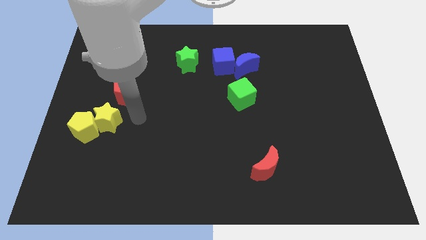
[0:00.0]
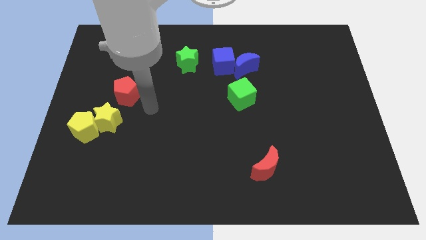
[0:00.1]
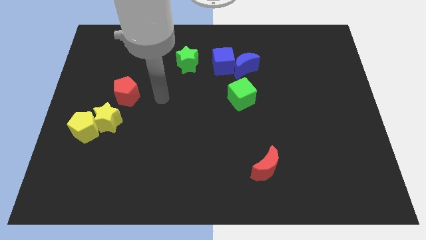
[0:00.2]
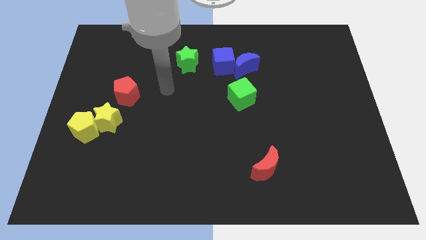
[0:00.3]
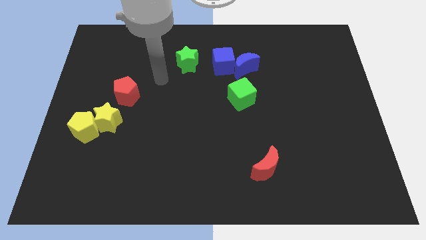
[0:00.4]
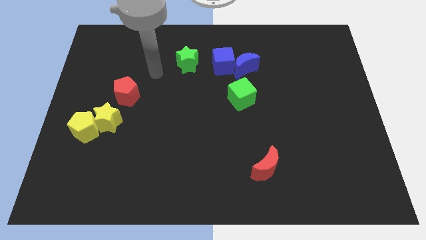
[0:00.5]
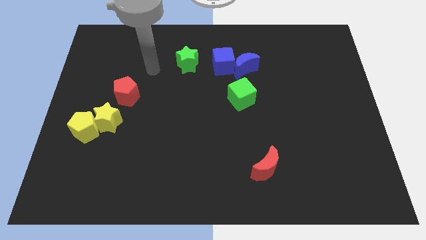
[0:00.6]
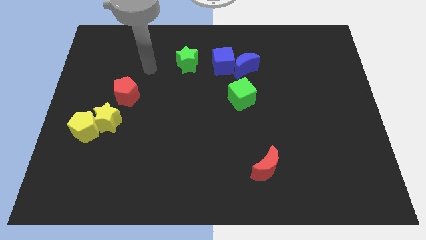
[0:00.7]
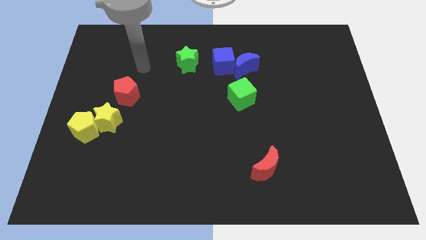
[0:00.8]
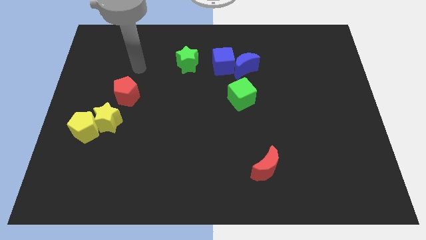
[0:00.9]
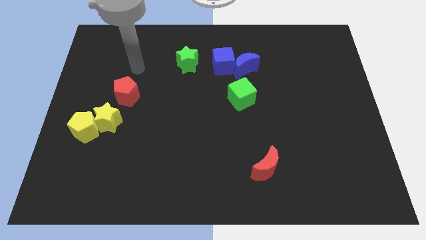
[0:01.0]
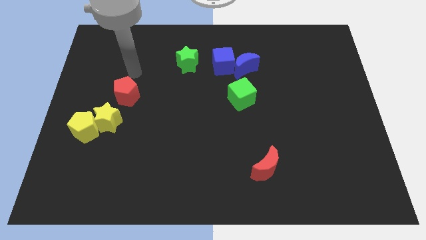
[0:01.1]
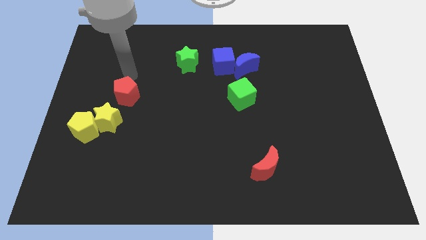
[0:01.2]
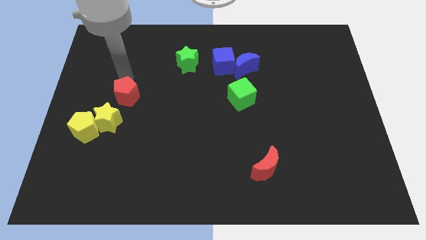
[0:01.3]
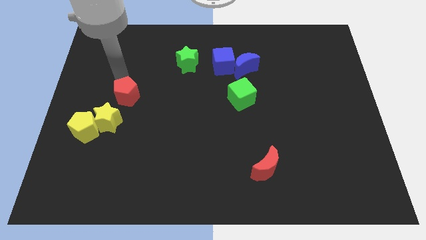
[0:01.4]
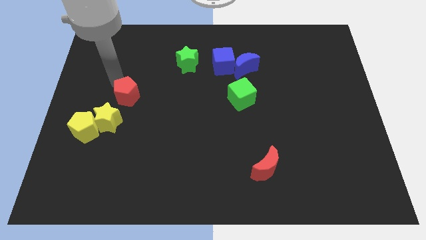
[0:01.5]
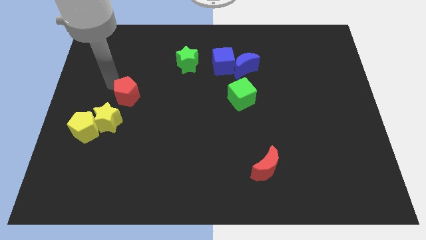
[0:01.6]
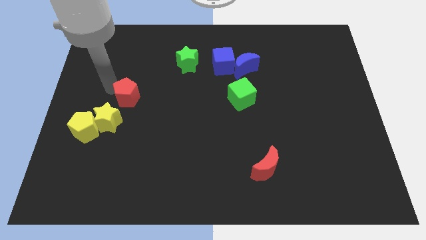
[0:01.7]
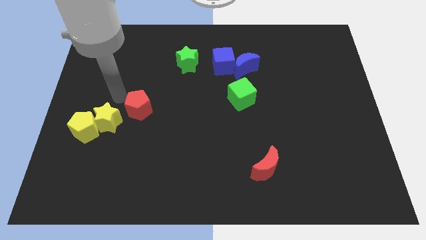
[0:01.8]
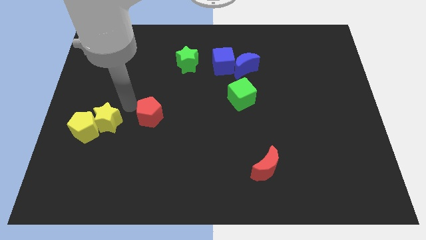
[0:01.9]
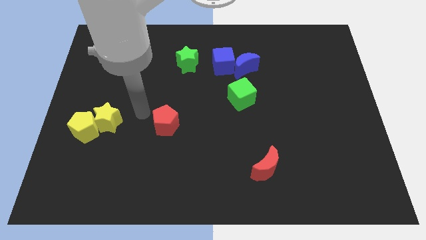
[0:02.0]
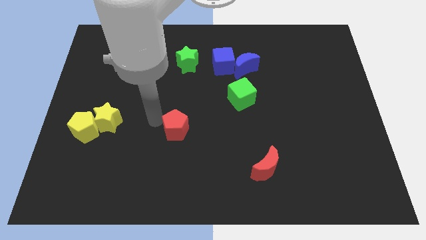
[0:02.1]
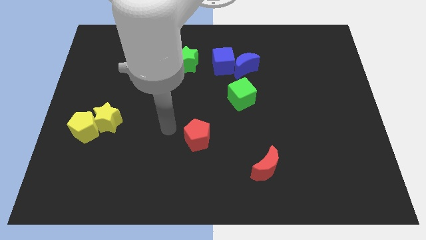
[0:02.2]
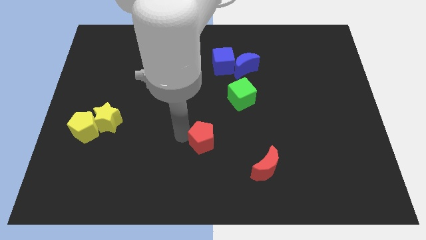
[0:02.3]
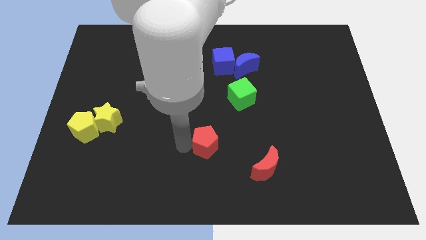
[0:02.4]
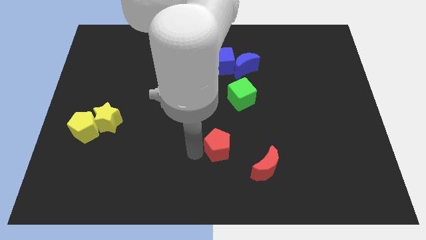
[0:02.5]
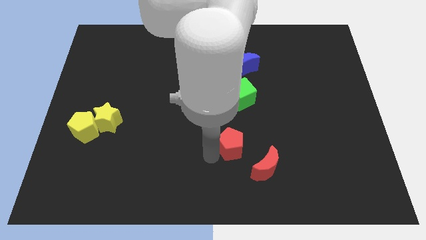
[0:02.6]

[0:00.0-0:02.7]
place the red pentagon below the green cube

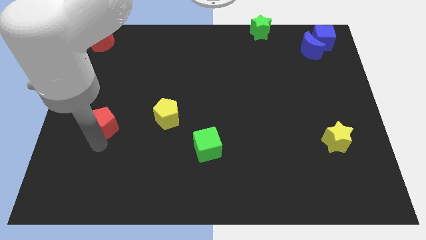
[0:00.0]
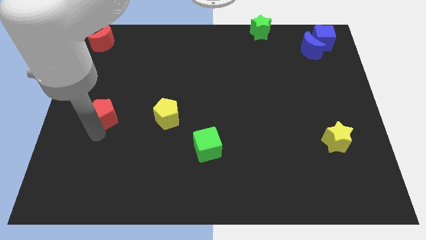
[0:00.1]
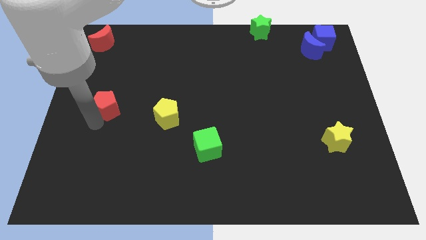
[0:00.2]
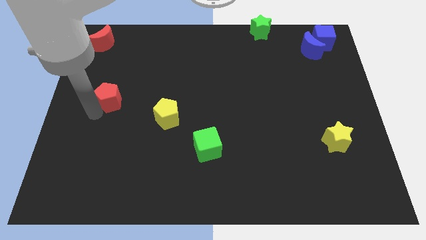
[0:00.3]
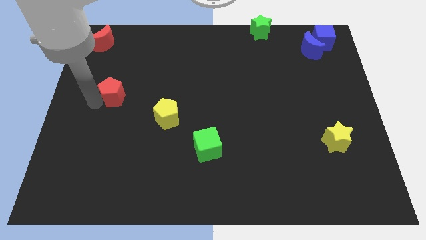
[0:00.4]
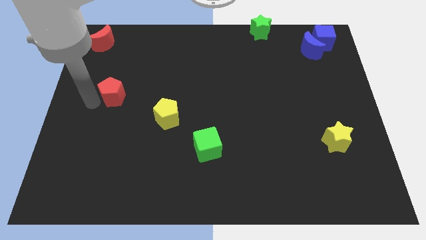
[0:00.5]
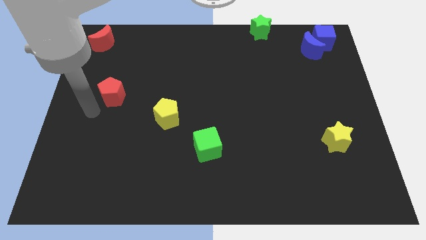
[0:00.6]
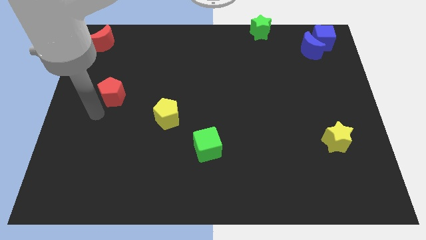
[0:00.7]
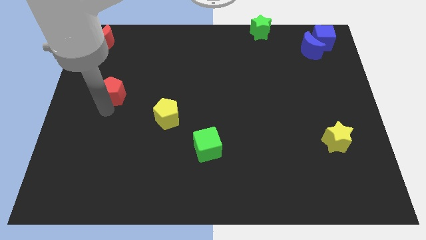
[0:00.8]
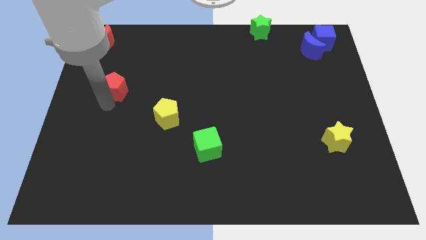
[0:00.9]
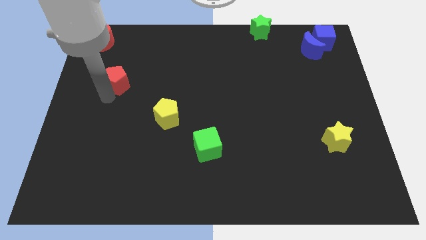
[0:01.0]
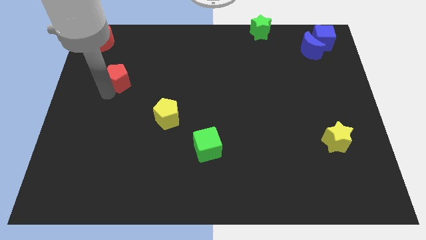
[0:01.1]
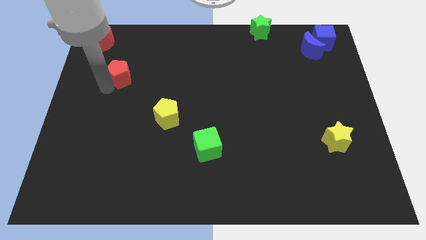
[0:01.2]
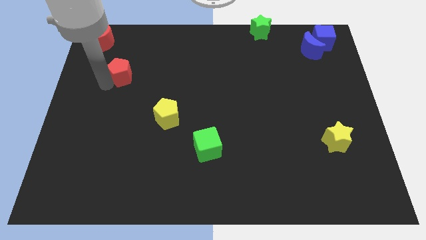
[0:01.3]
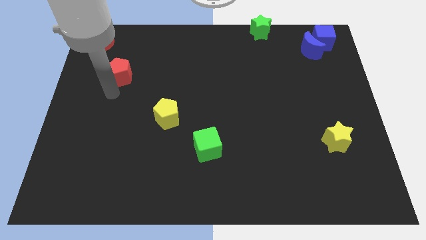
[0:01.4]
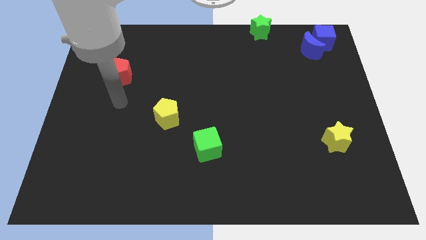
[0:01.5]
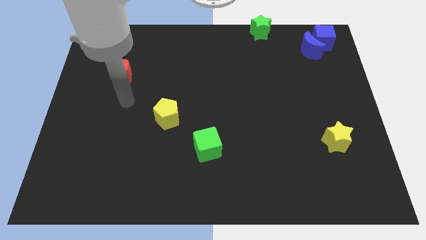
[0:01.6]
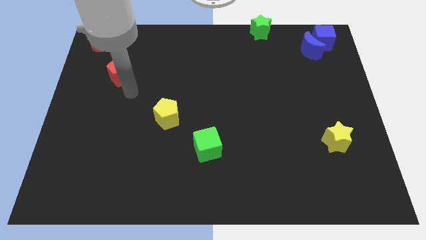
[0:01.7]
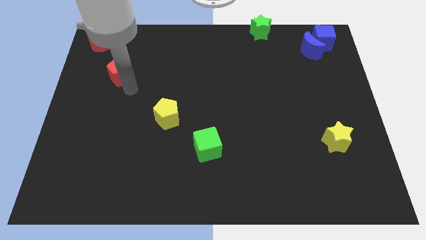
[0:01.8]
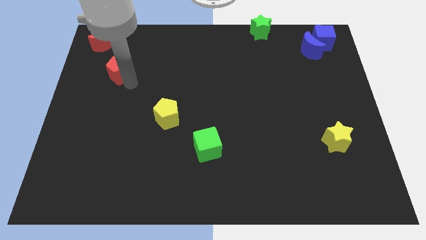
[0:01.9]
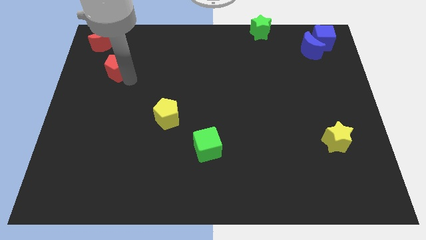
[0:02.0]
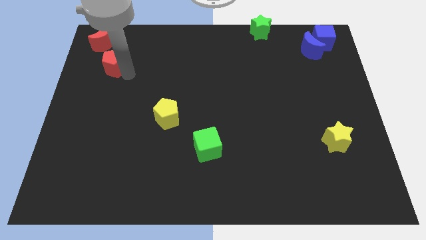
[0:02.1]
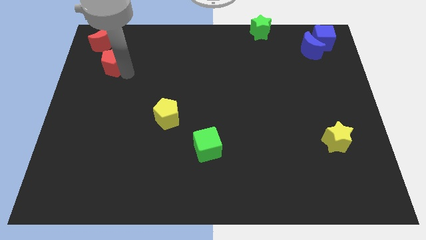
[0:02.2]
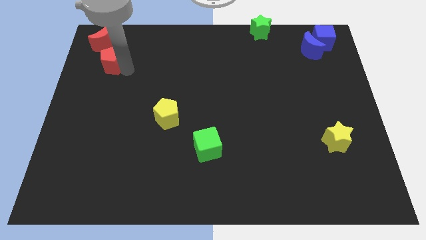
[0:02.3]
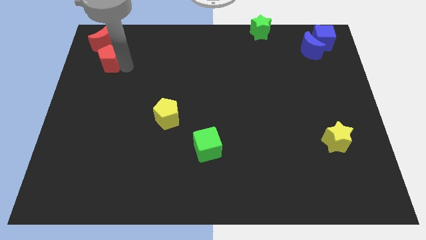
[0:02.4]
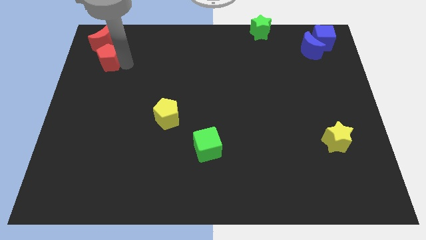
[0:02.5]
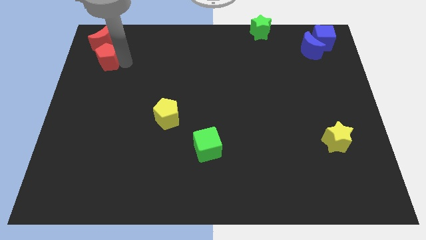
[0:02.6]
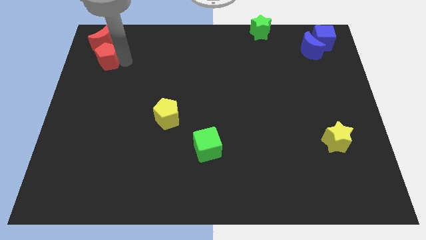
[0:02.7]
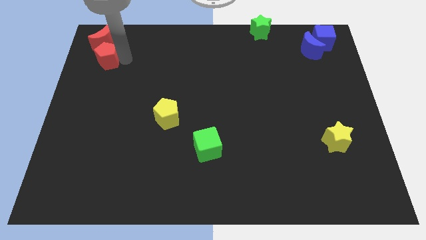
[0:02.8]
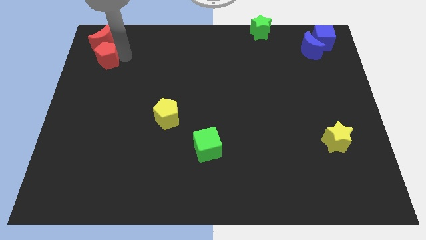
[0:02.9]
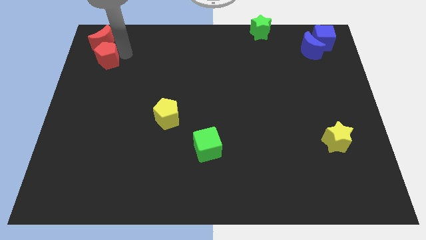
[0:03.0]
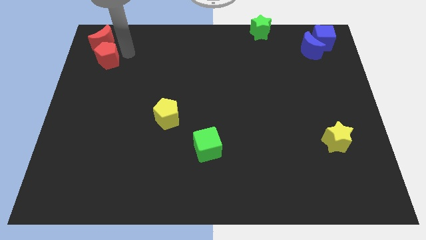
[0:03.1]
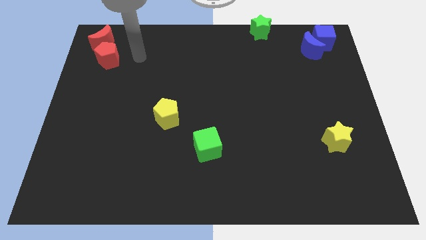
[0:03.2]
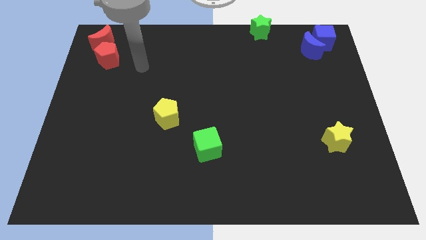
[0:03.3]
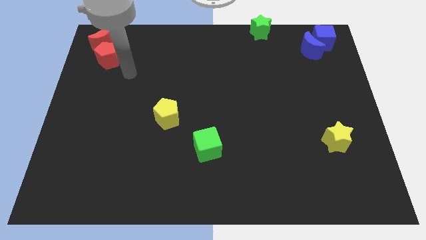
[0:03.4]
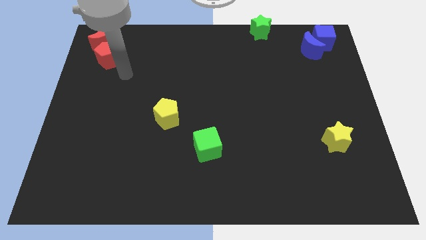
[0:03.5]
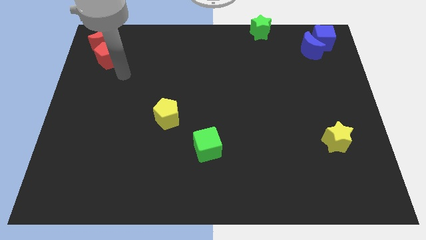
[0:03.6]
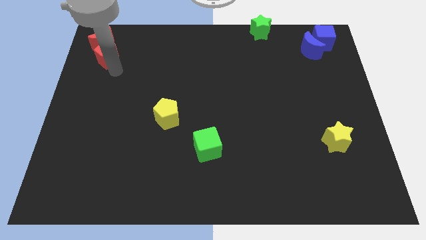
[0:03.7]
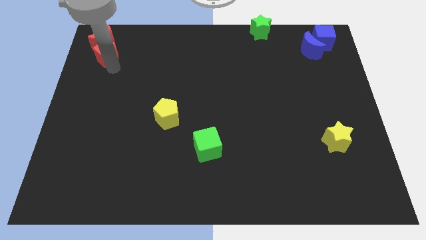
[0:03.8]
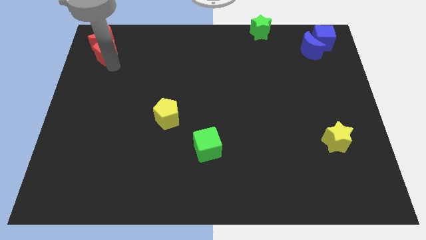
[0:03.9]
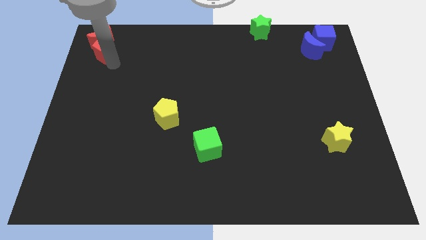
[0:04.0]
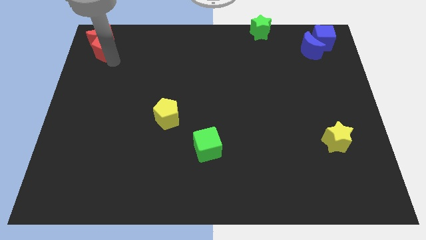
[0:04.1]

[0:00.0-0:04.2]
push the red pentagon into the red moon

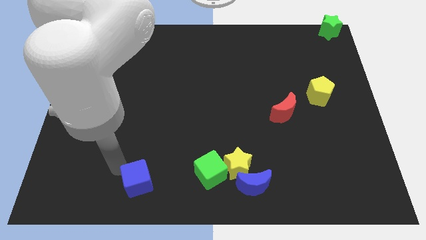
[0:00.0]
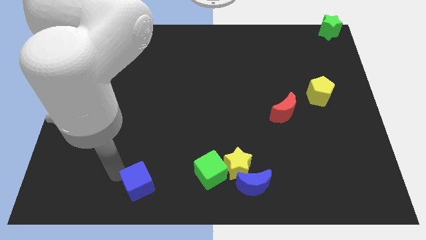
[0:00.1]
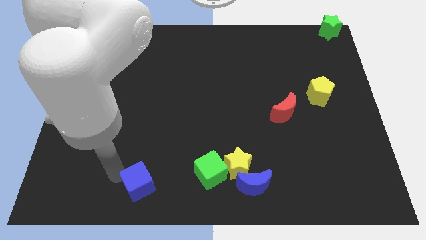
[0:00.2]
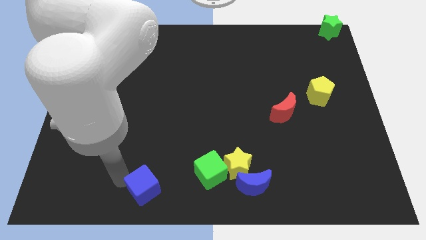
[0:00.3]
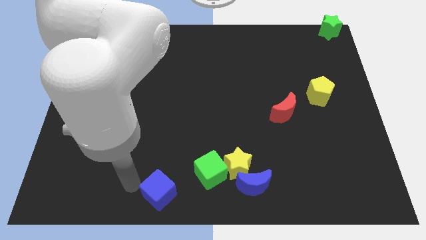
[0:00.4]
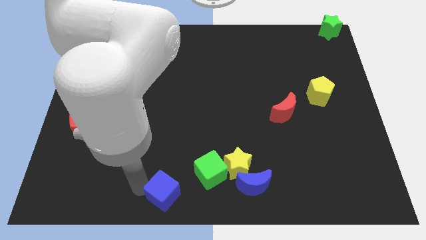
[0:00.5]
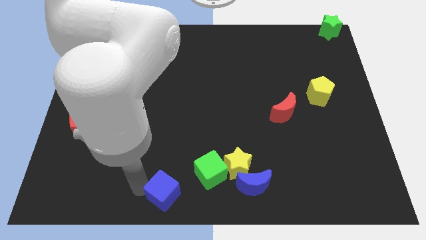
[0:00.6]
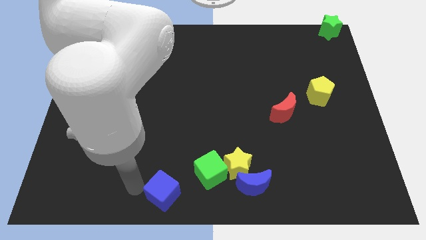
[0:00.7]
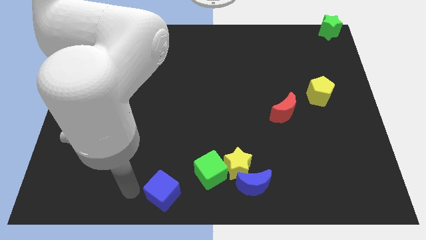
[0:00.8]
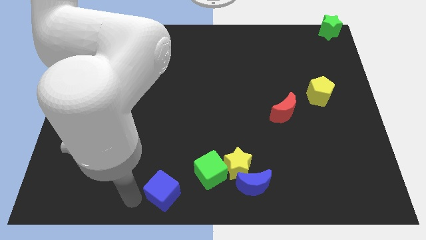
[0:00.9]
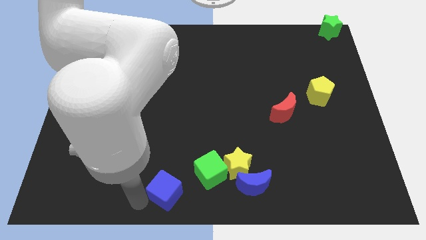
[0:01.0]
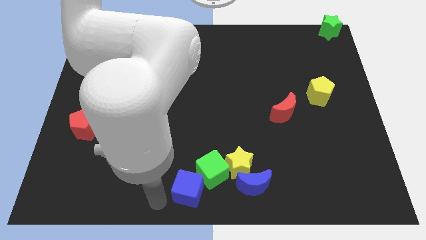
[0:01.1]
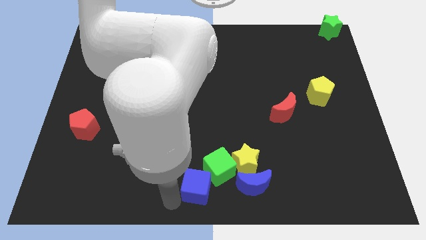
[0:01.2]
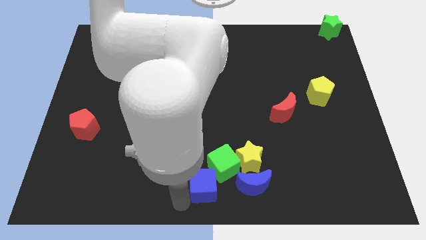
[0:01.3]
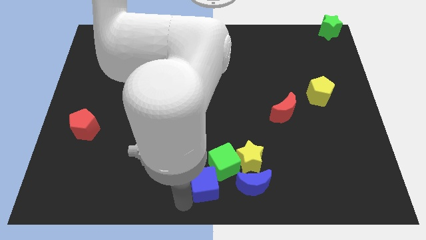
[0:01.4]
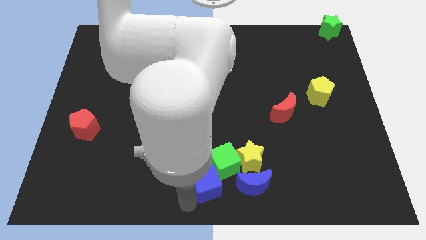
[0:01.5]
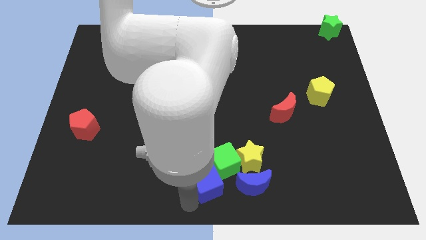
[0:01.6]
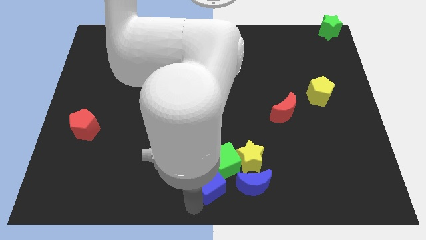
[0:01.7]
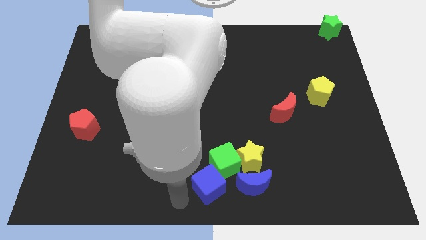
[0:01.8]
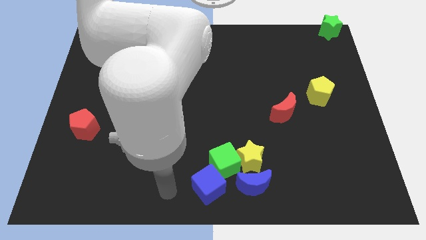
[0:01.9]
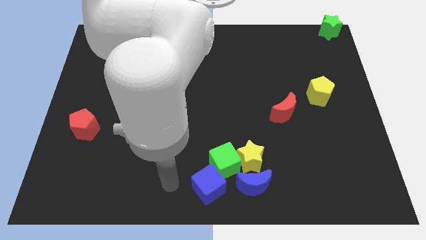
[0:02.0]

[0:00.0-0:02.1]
push the blue cube into green cube
